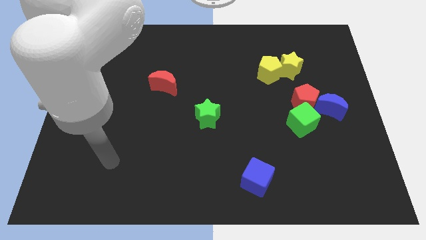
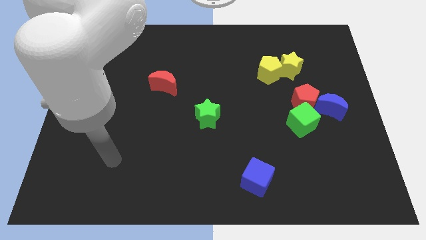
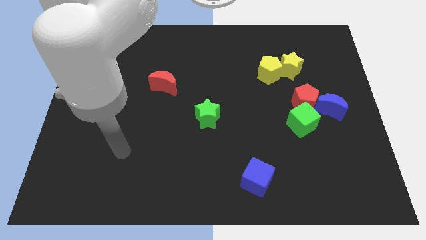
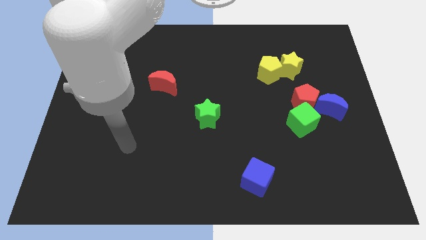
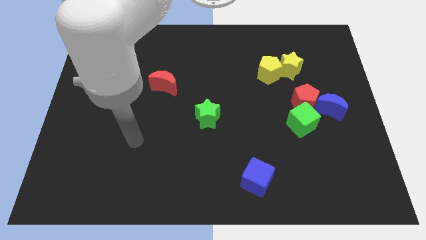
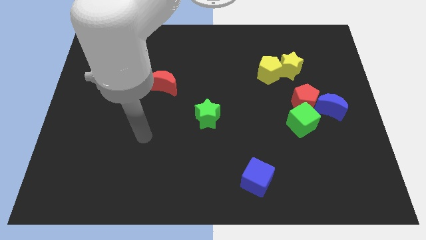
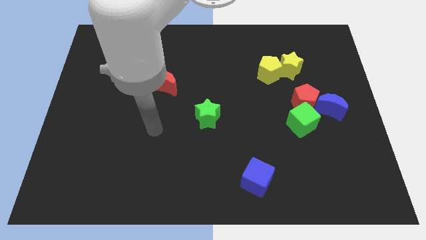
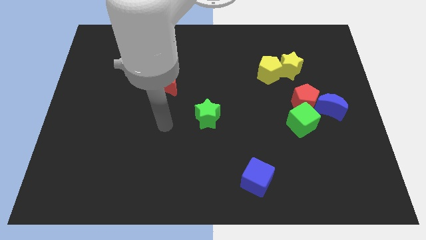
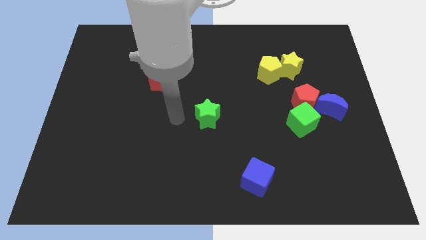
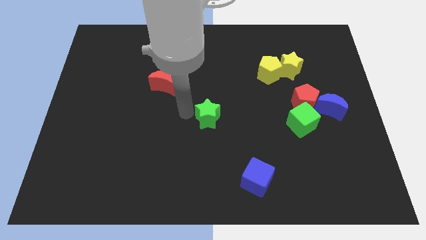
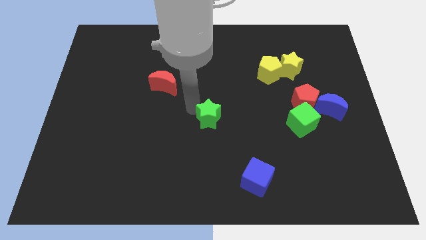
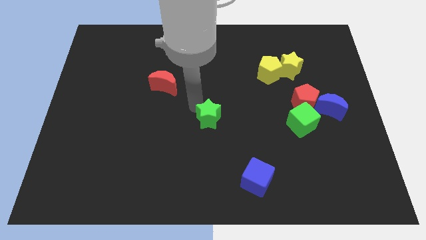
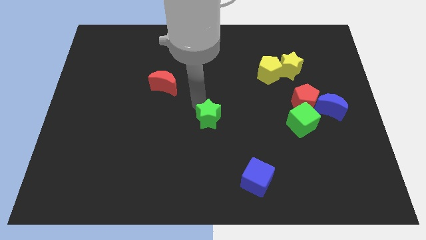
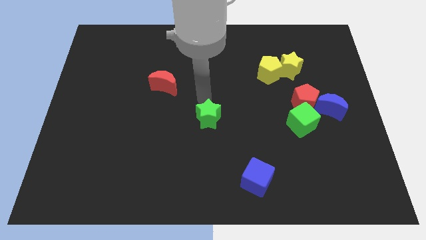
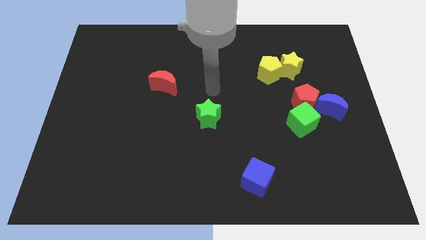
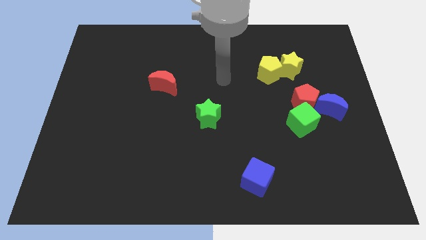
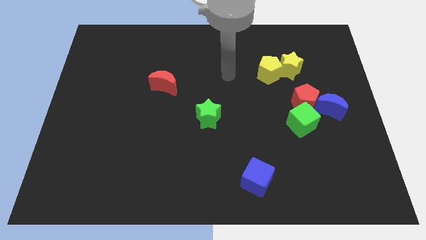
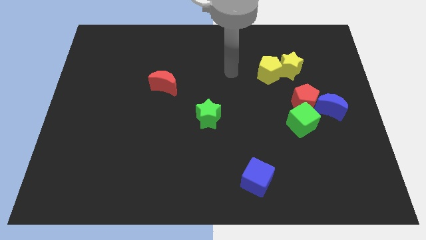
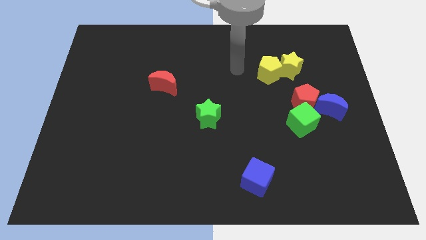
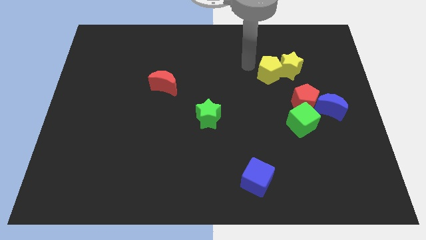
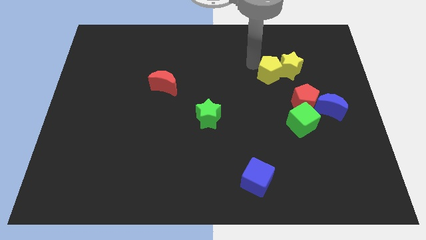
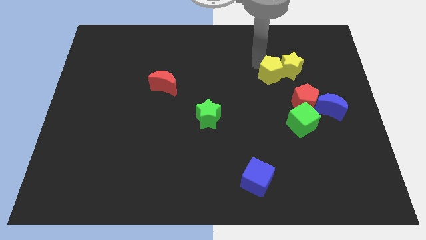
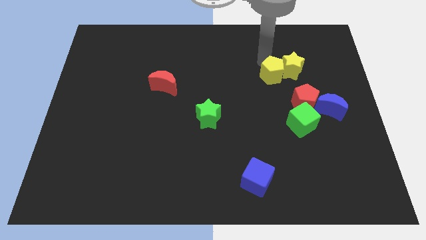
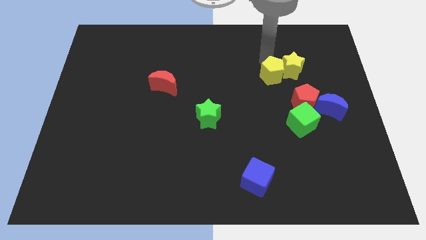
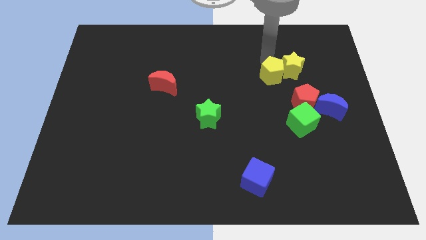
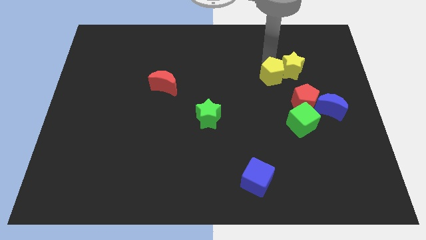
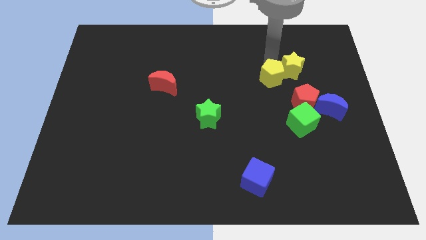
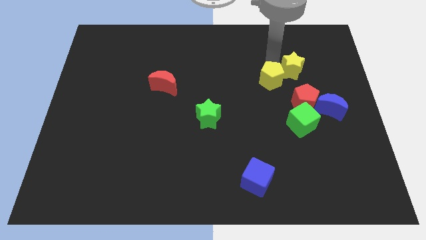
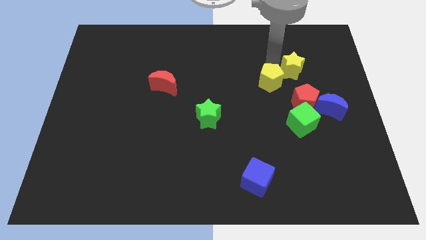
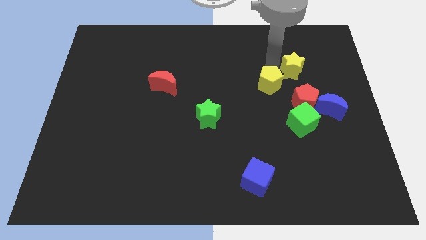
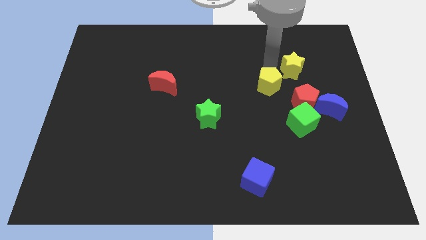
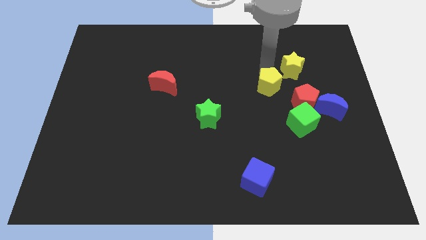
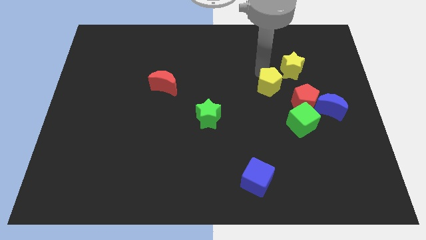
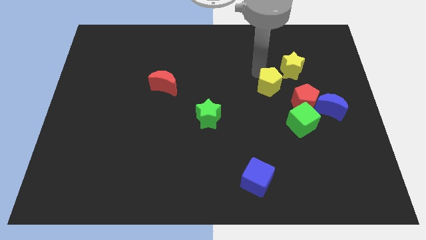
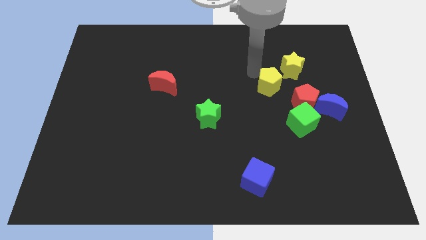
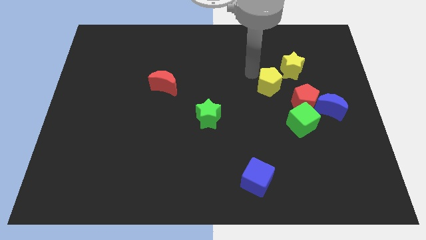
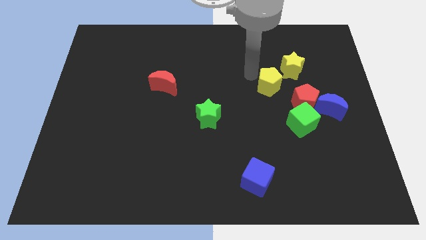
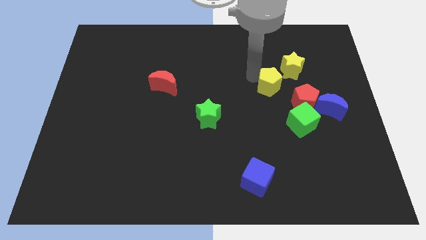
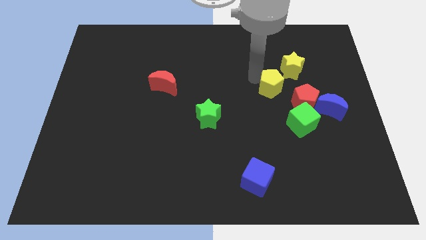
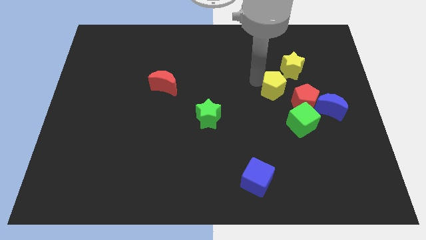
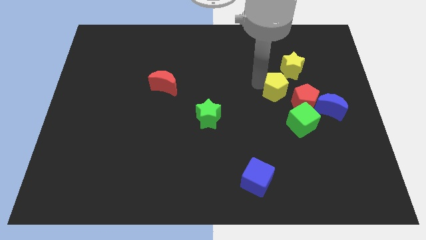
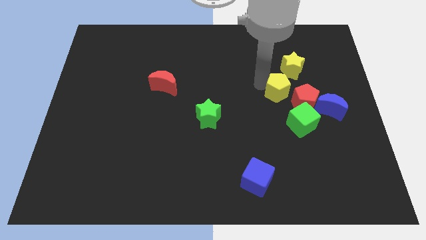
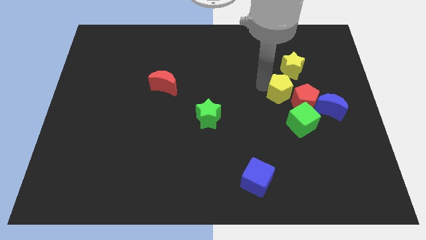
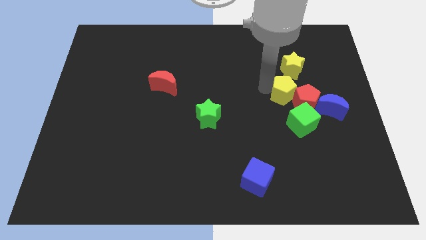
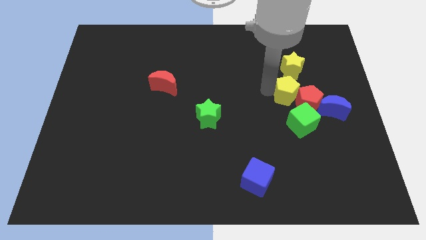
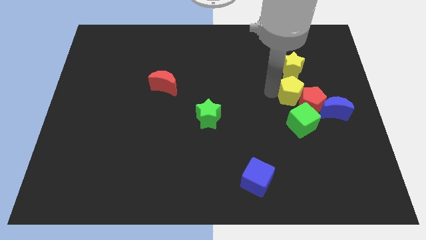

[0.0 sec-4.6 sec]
slide the yellow pentagon towards the red pentagon

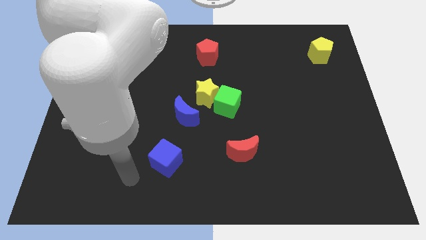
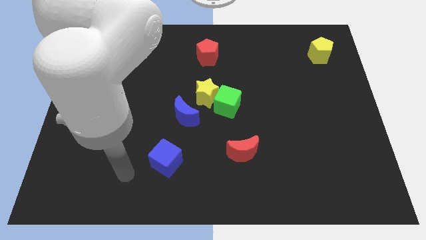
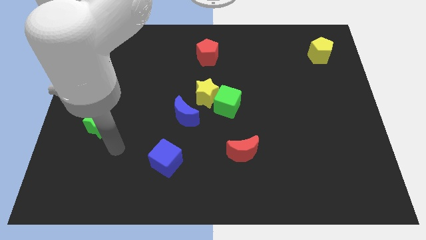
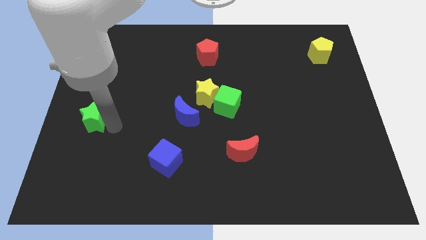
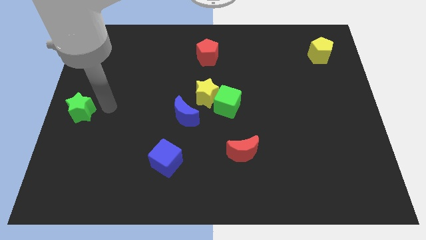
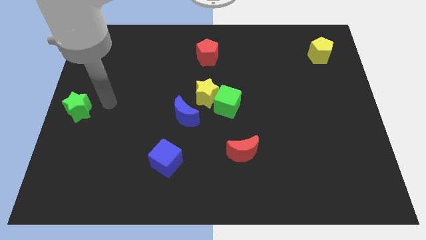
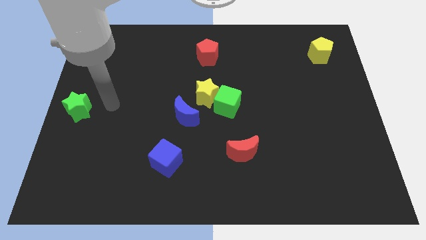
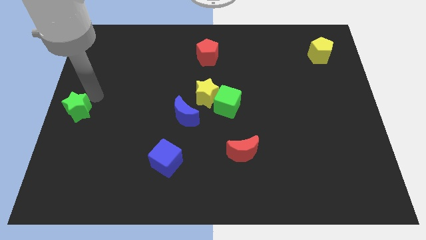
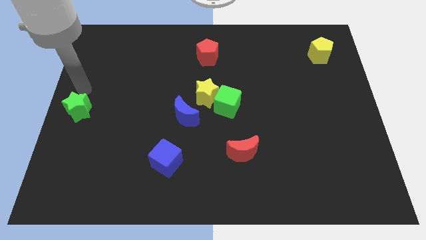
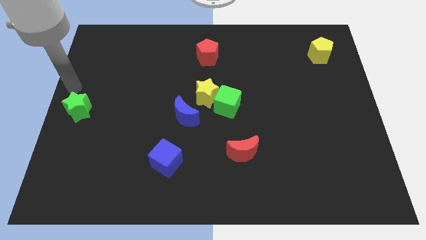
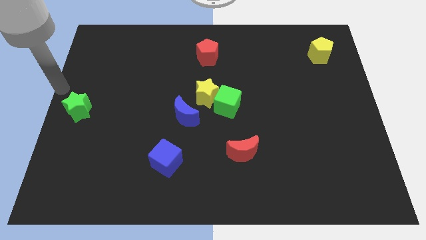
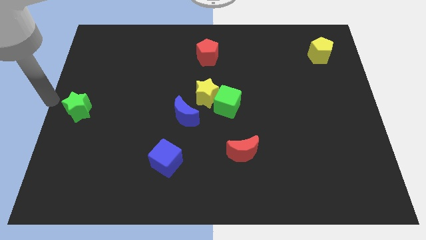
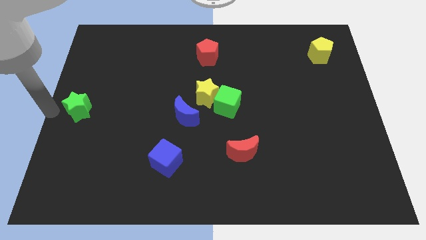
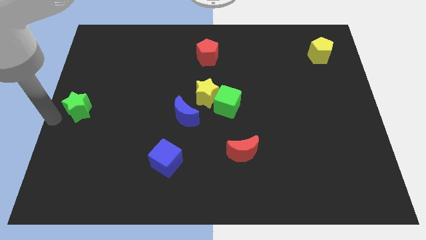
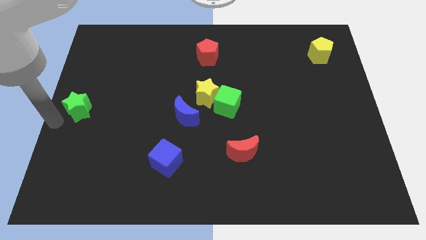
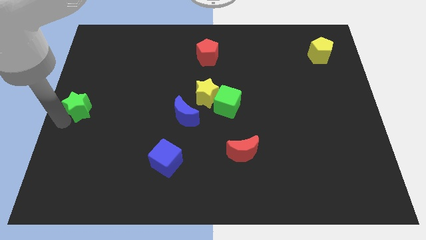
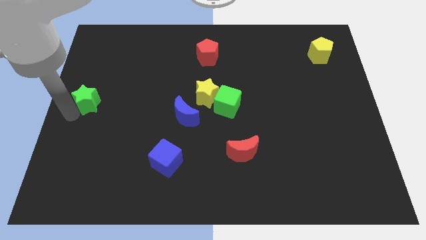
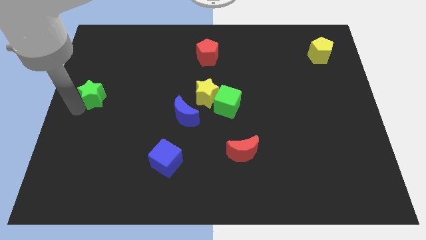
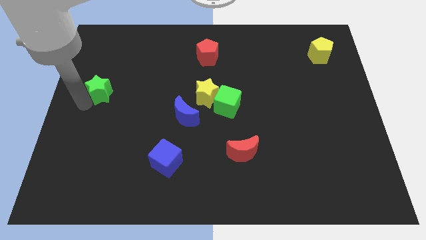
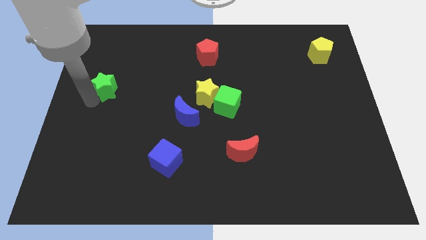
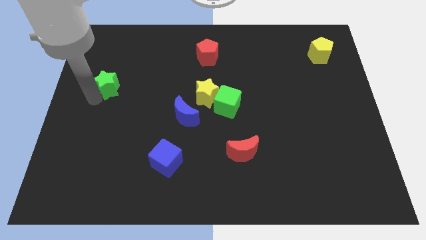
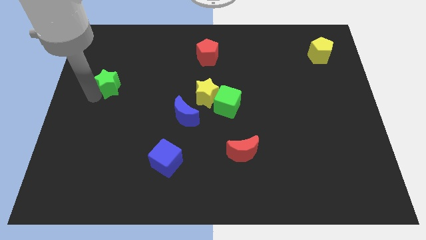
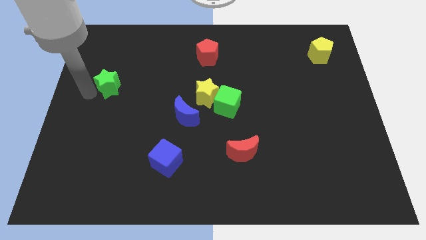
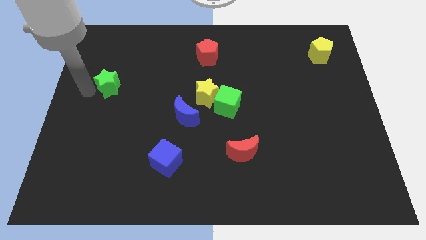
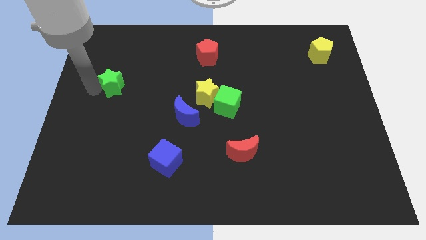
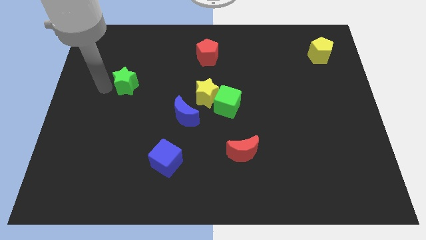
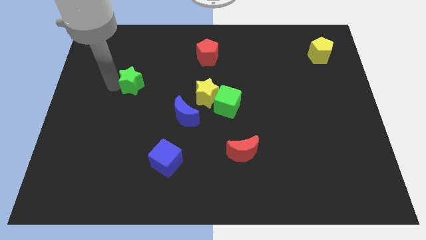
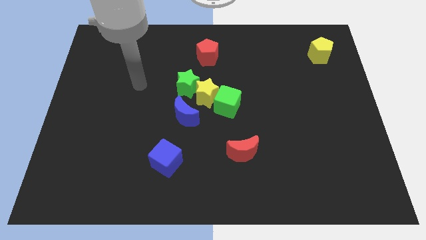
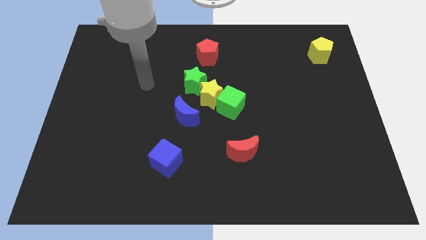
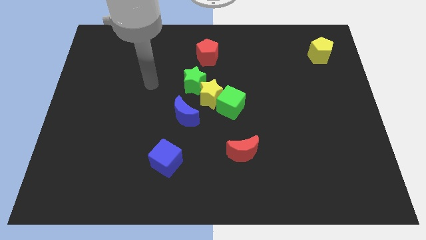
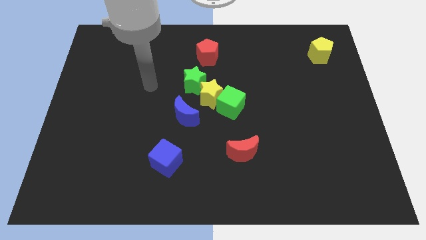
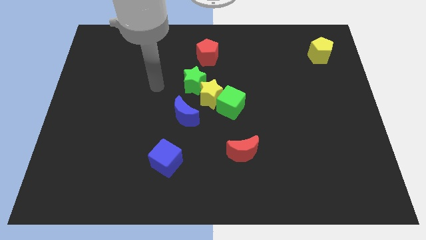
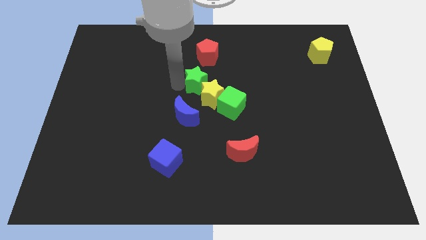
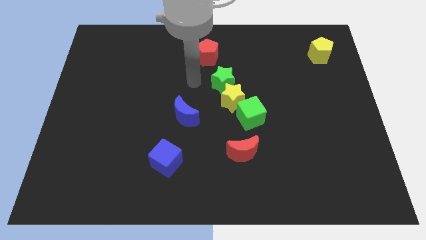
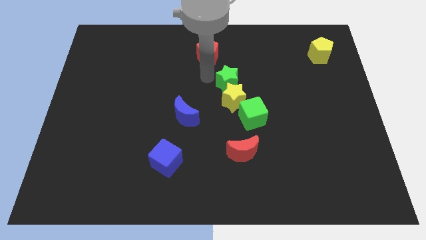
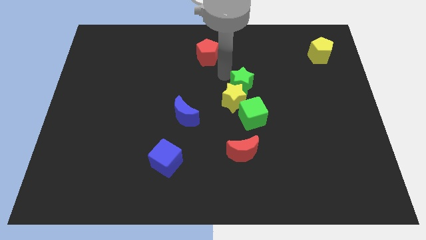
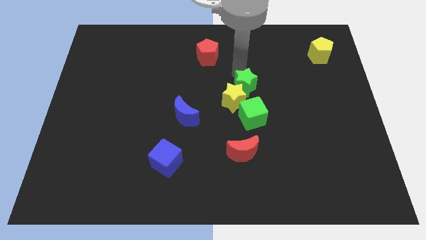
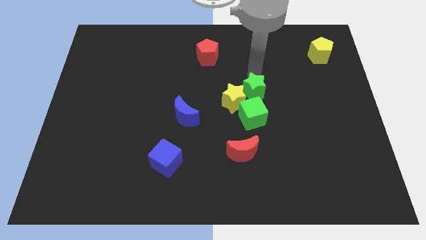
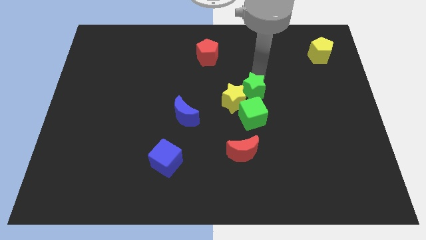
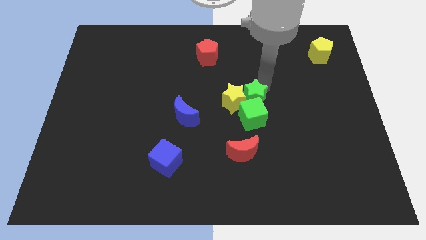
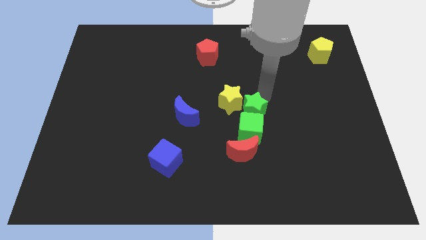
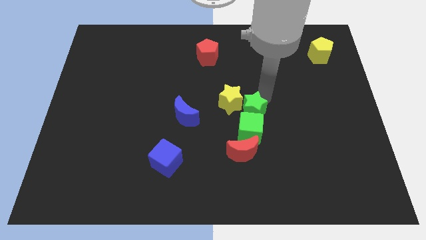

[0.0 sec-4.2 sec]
slide the green star to the green cube
